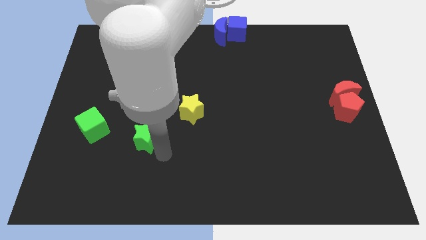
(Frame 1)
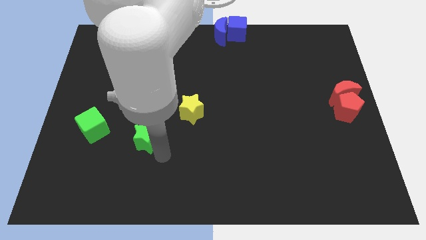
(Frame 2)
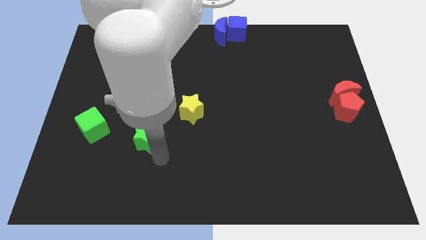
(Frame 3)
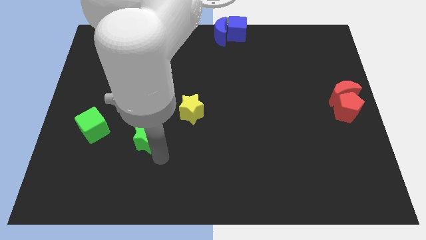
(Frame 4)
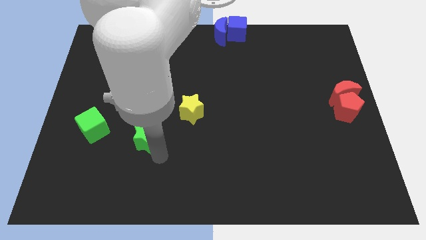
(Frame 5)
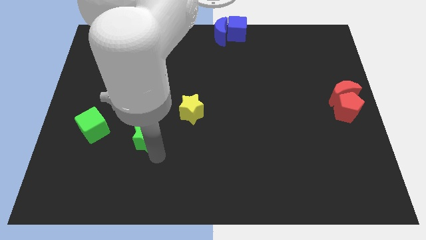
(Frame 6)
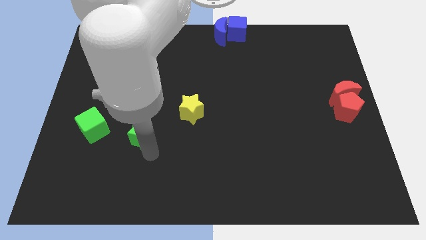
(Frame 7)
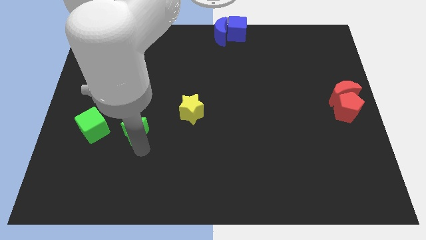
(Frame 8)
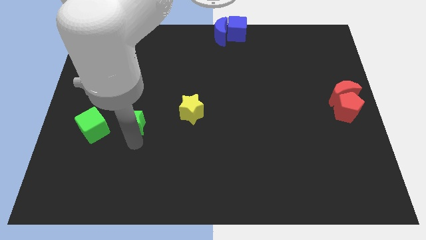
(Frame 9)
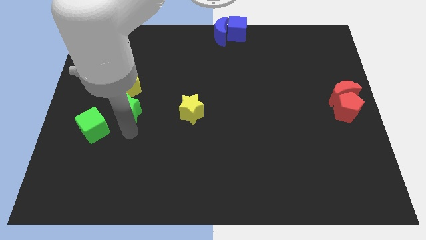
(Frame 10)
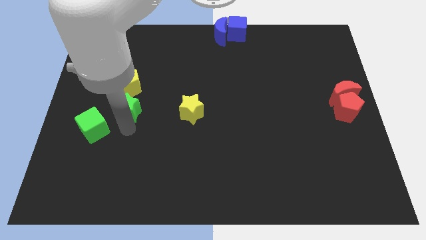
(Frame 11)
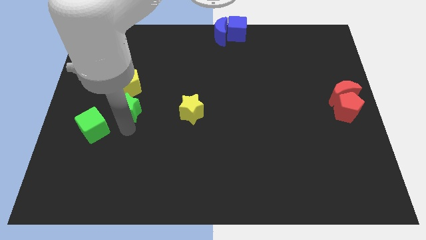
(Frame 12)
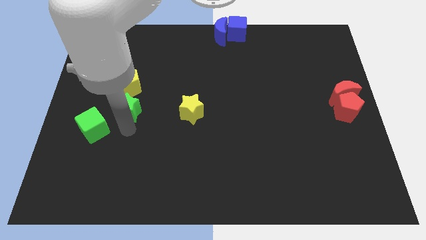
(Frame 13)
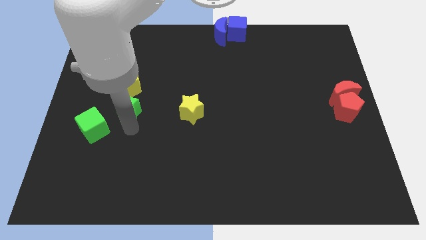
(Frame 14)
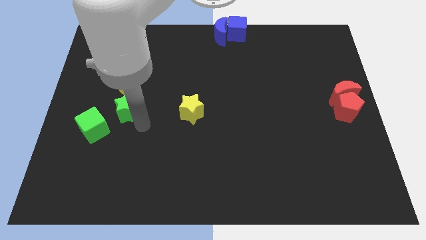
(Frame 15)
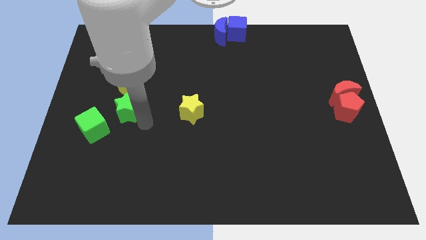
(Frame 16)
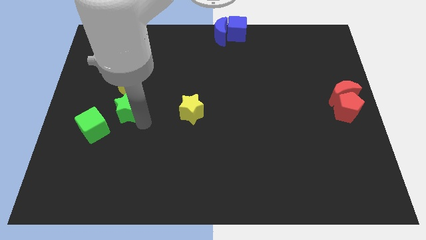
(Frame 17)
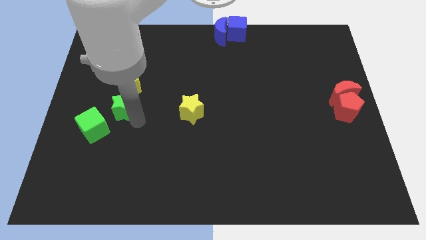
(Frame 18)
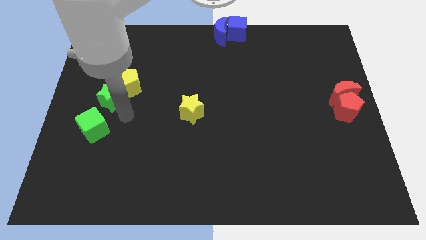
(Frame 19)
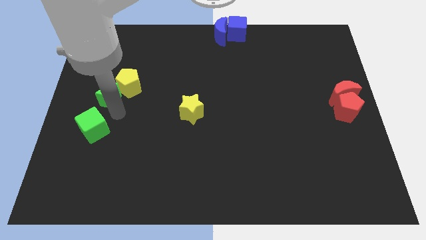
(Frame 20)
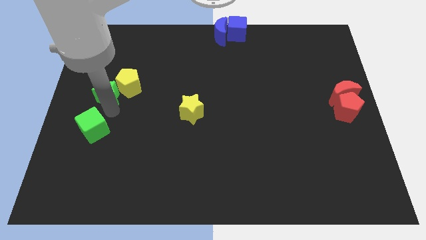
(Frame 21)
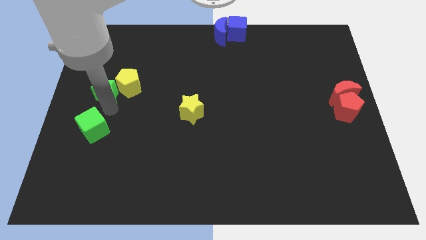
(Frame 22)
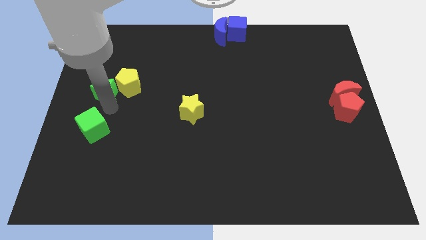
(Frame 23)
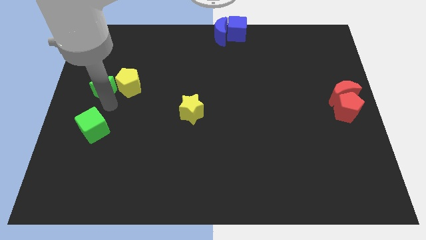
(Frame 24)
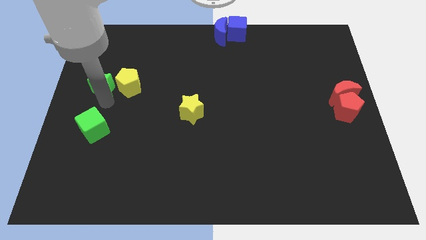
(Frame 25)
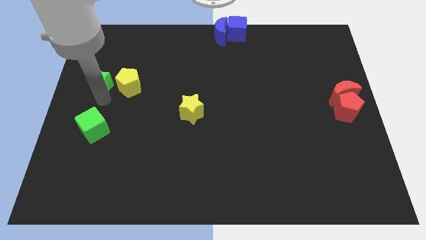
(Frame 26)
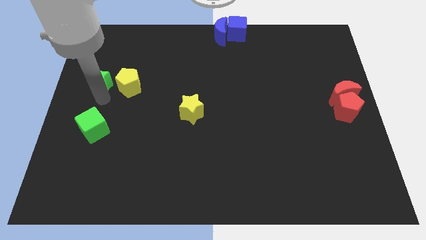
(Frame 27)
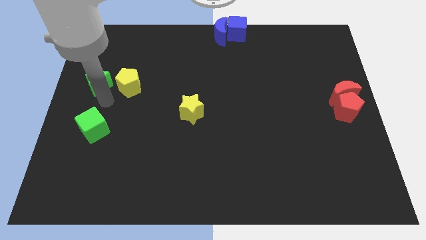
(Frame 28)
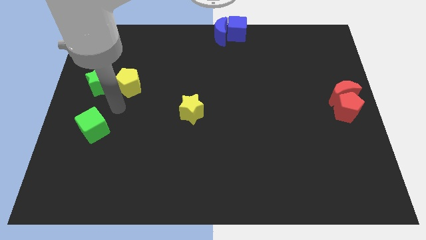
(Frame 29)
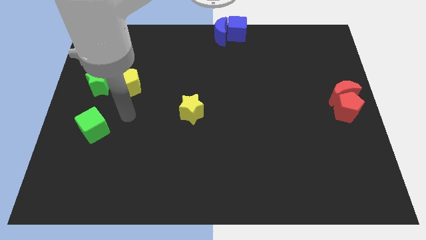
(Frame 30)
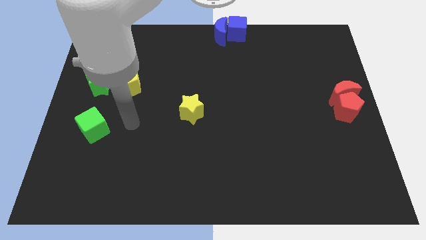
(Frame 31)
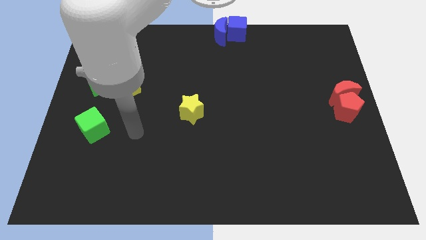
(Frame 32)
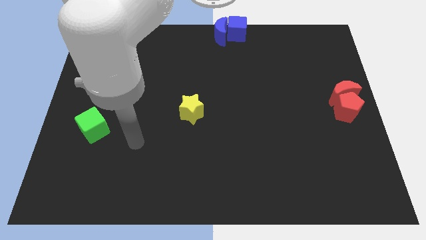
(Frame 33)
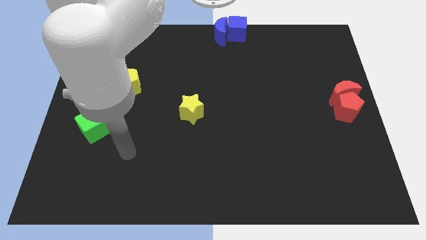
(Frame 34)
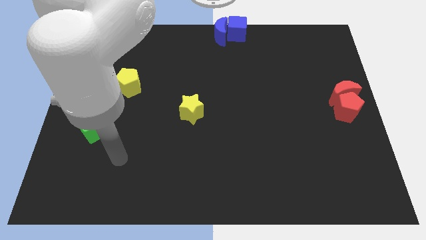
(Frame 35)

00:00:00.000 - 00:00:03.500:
push the green star parallel left of the yellow pentagon

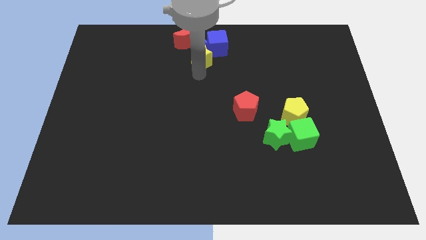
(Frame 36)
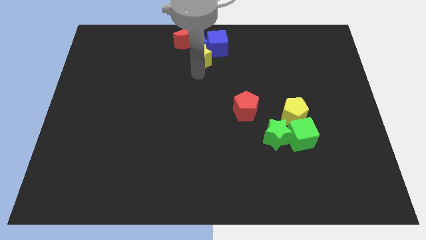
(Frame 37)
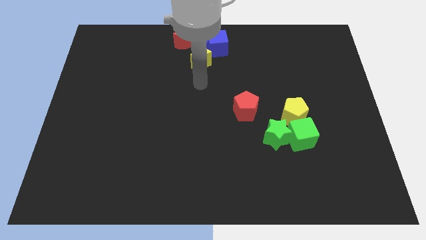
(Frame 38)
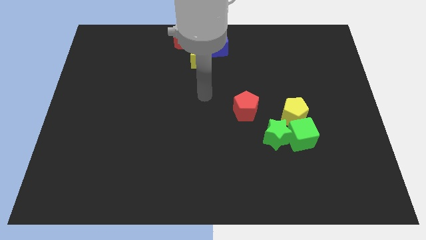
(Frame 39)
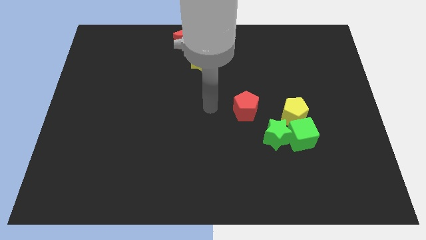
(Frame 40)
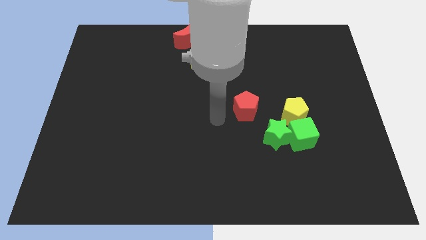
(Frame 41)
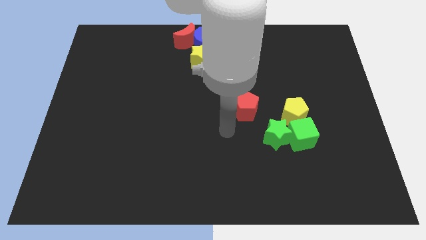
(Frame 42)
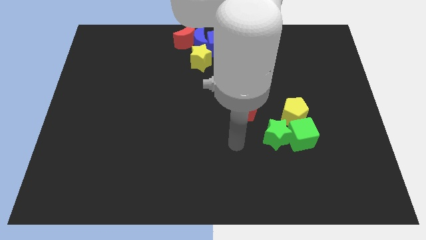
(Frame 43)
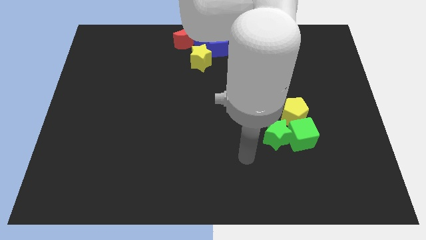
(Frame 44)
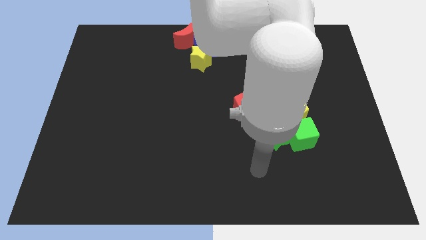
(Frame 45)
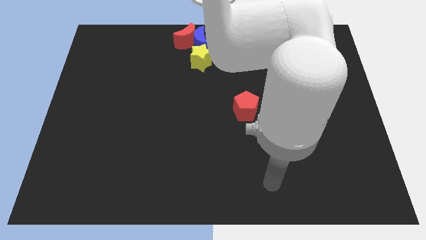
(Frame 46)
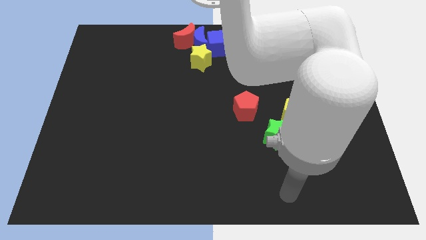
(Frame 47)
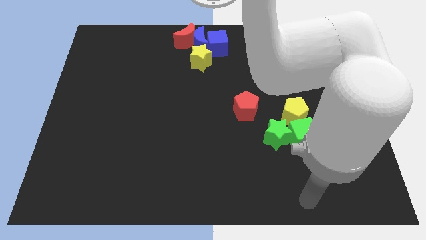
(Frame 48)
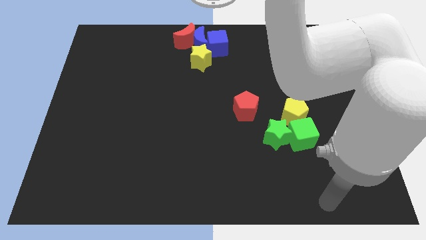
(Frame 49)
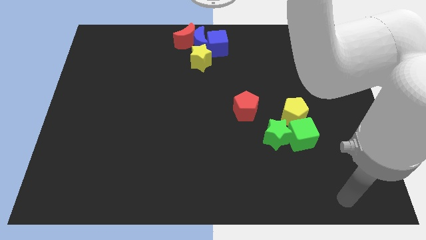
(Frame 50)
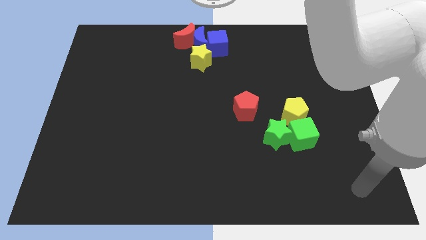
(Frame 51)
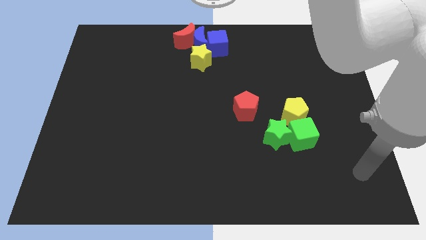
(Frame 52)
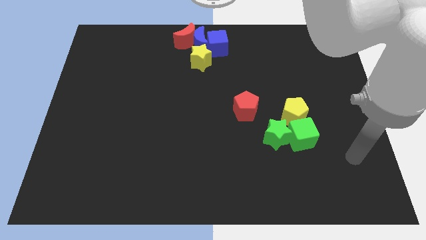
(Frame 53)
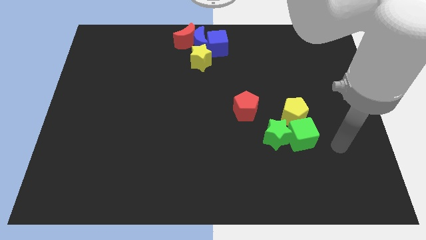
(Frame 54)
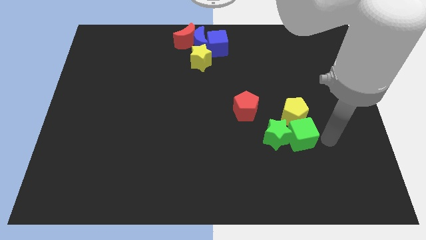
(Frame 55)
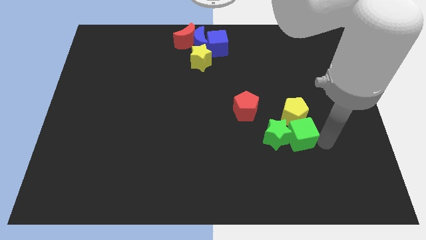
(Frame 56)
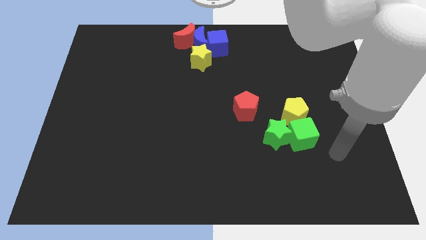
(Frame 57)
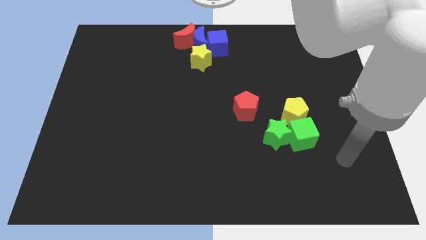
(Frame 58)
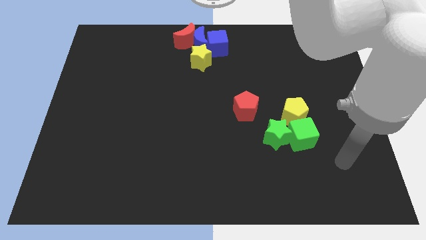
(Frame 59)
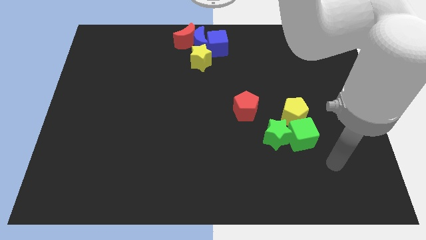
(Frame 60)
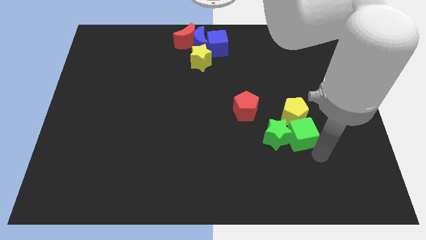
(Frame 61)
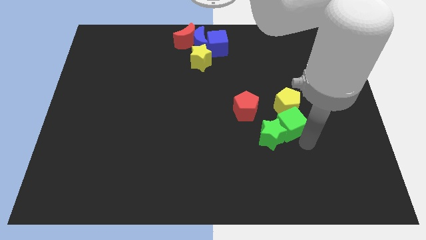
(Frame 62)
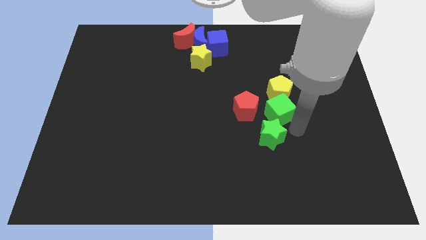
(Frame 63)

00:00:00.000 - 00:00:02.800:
place the green cube between green star and yellow pentagon

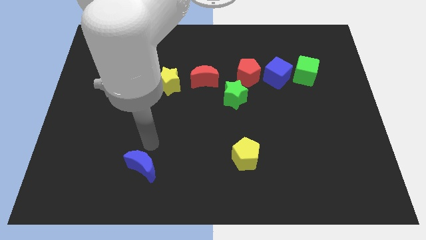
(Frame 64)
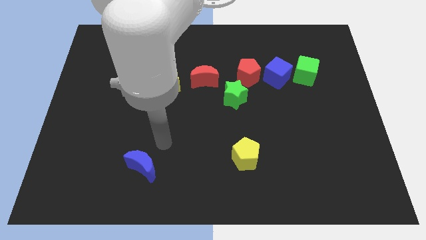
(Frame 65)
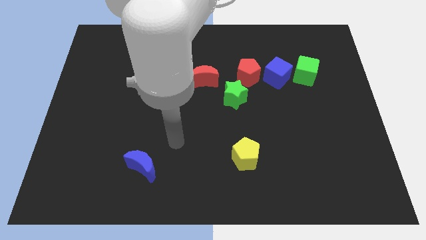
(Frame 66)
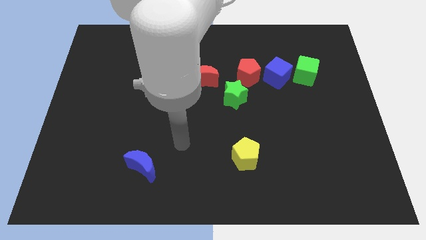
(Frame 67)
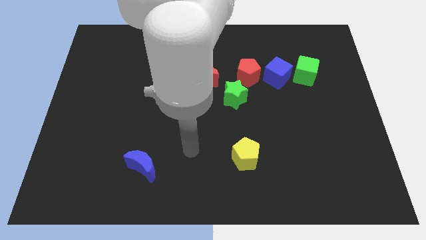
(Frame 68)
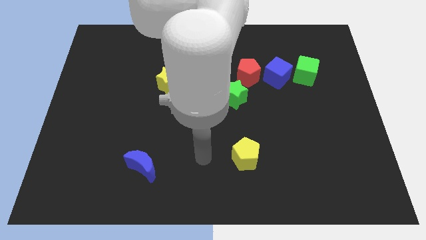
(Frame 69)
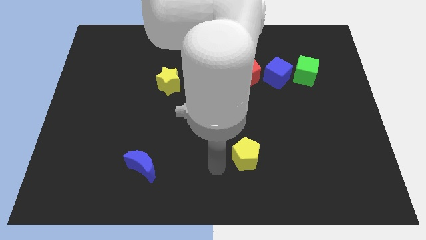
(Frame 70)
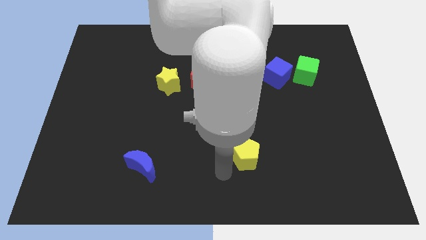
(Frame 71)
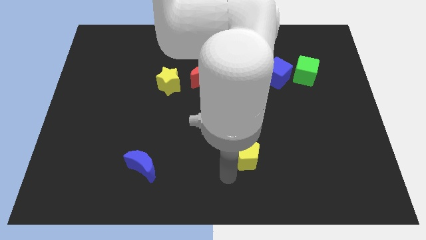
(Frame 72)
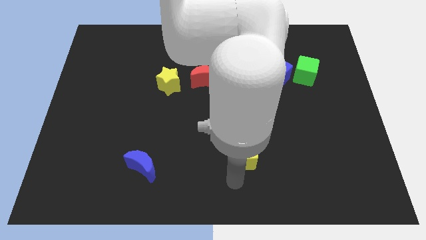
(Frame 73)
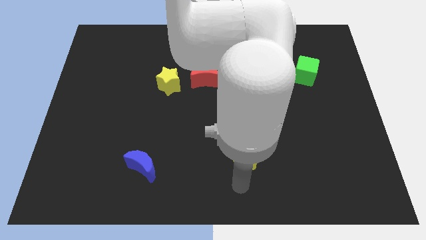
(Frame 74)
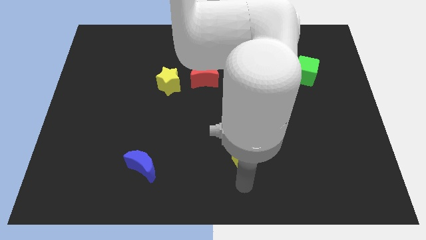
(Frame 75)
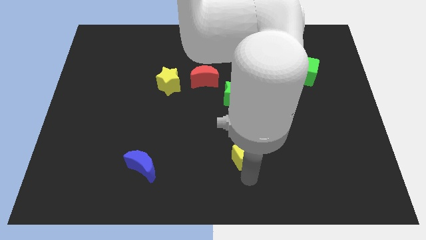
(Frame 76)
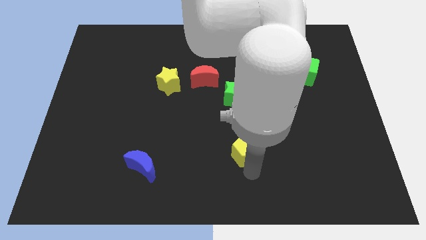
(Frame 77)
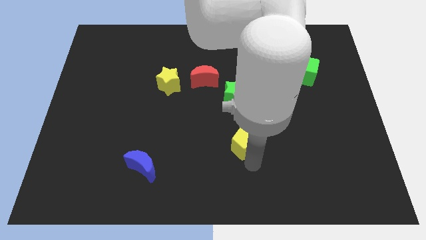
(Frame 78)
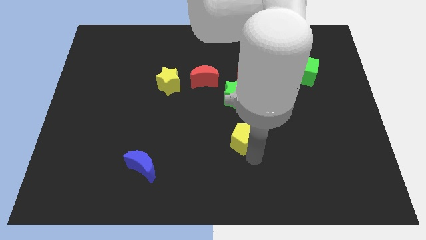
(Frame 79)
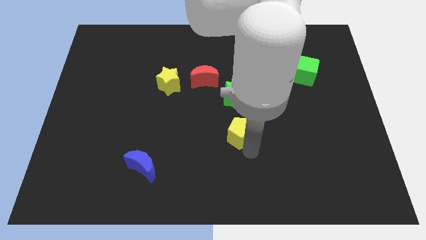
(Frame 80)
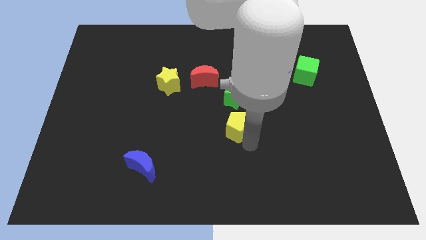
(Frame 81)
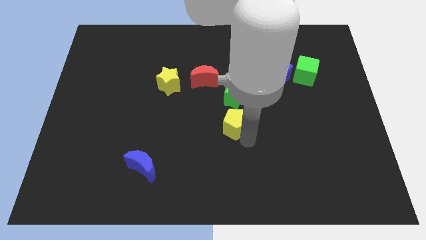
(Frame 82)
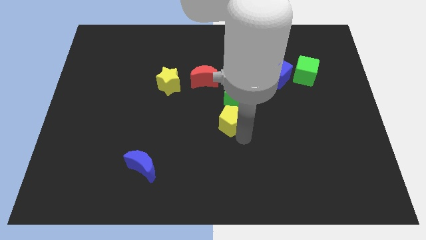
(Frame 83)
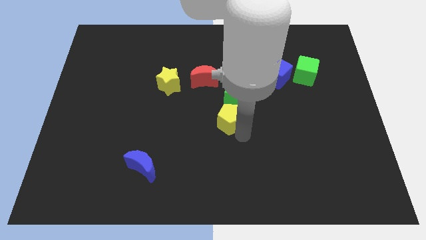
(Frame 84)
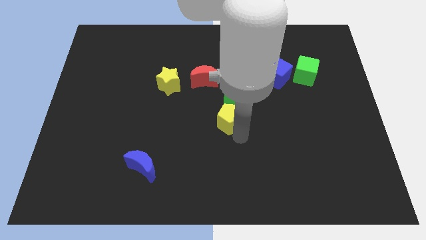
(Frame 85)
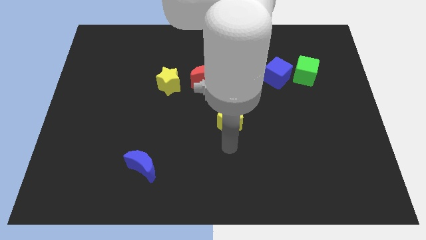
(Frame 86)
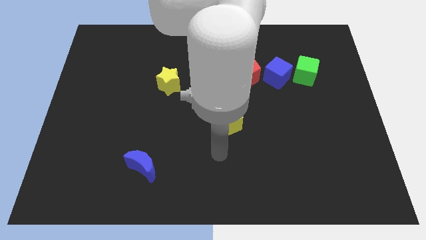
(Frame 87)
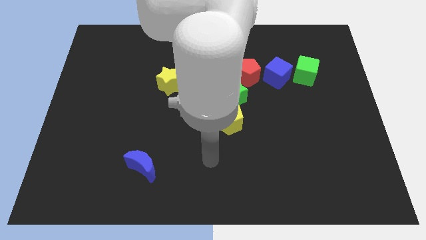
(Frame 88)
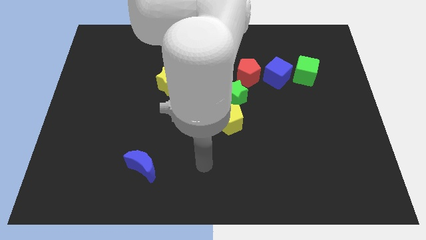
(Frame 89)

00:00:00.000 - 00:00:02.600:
place the yellow pentagon below the green star
